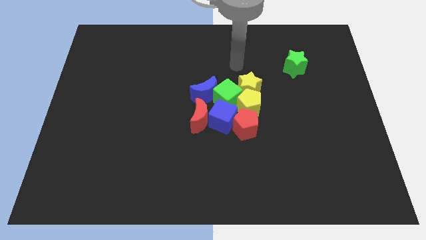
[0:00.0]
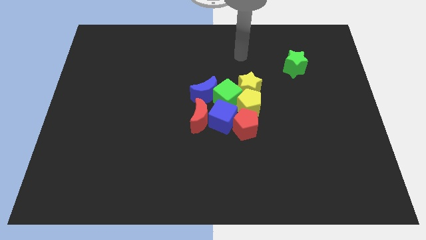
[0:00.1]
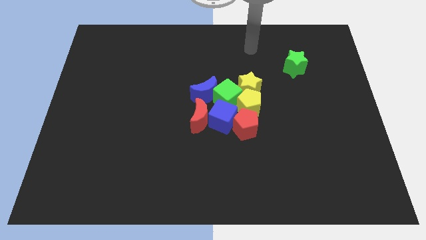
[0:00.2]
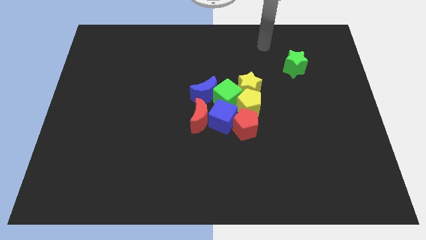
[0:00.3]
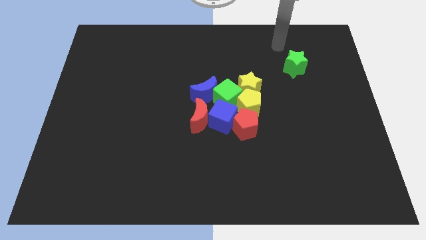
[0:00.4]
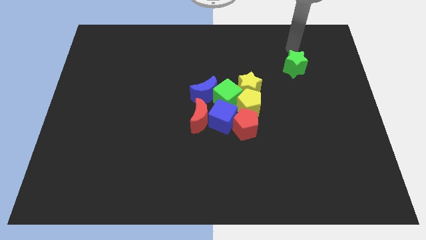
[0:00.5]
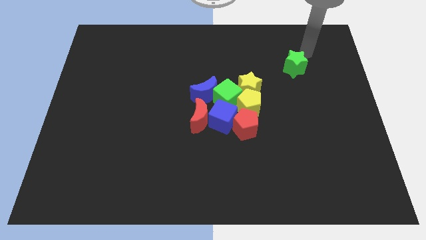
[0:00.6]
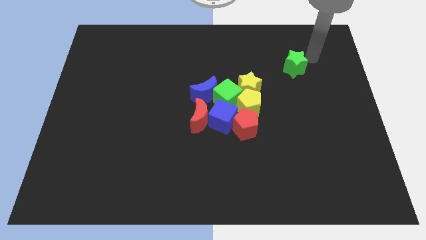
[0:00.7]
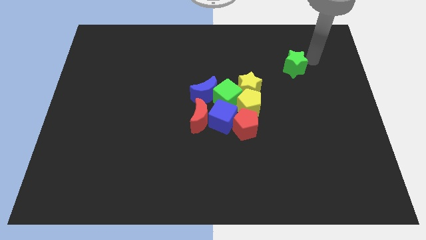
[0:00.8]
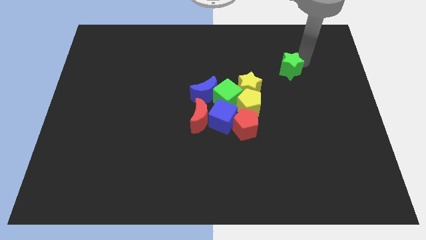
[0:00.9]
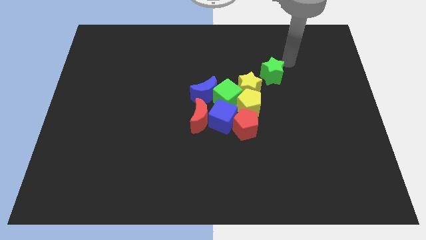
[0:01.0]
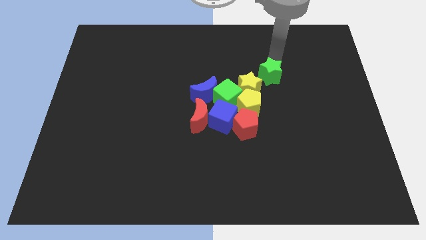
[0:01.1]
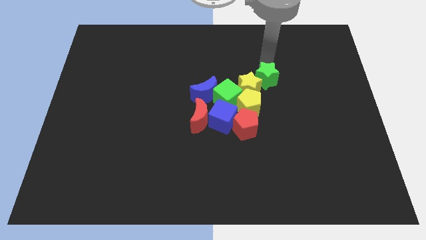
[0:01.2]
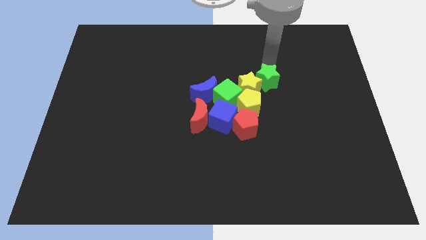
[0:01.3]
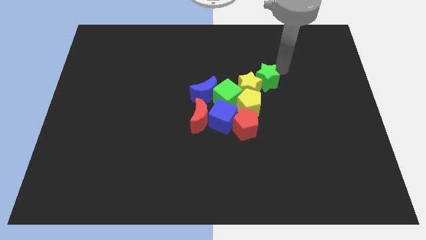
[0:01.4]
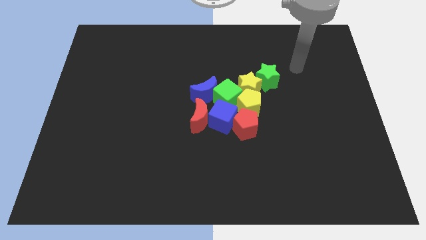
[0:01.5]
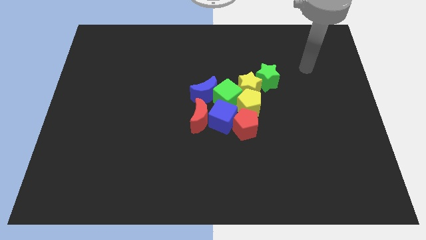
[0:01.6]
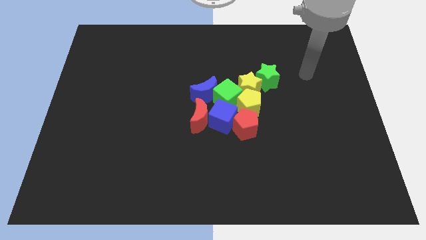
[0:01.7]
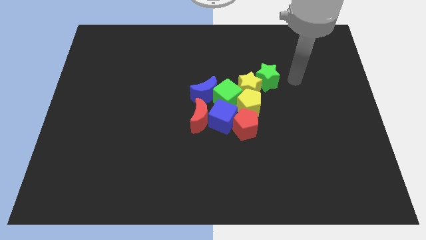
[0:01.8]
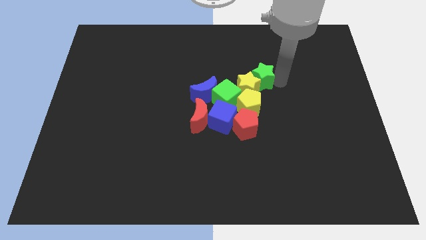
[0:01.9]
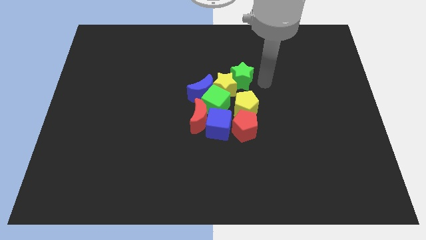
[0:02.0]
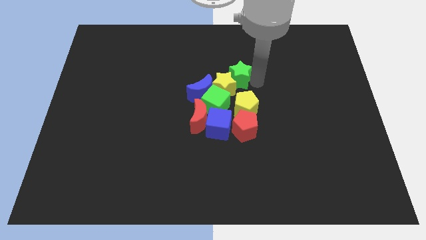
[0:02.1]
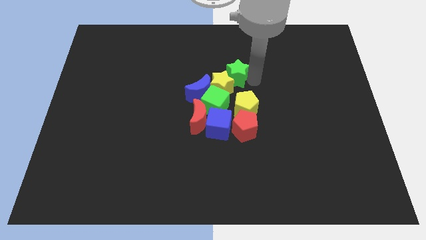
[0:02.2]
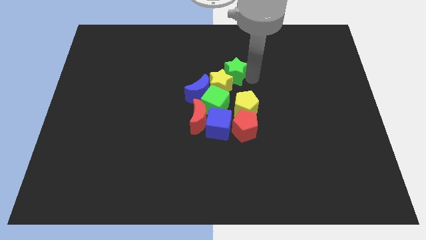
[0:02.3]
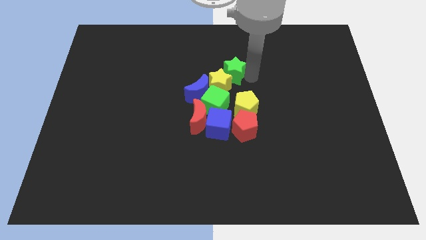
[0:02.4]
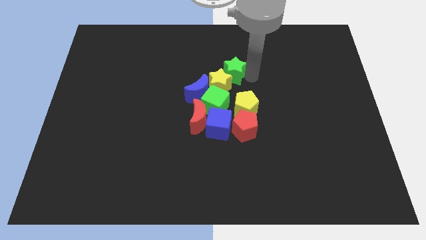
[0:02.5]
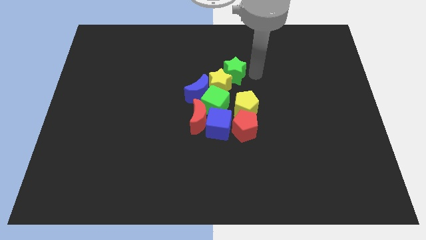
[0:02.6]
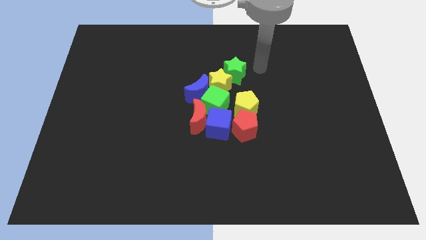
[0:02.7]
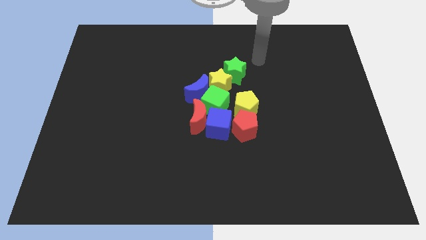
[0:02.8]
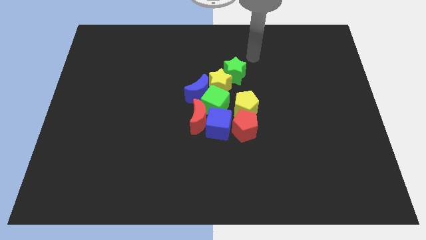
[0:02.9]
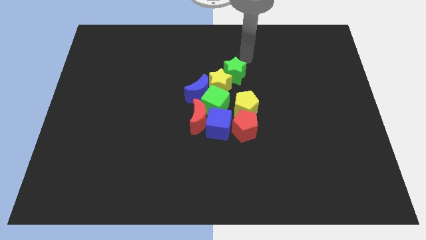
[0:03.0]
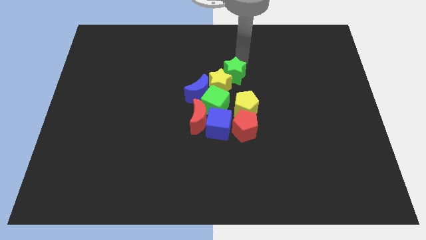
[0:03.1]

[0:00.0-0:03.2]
slide the green star to the top right side of the yellow star

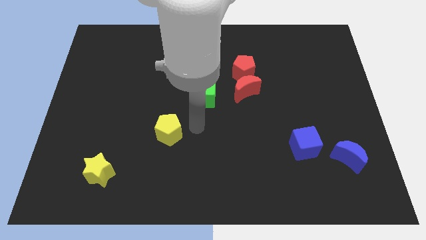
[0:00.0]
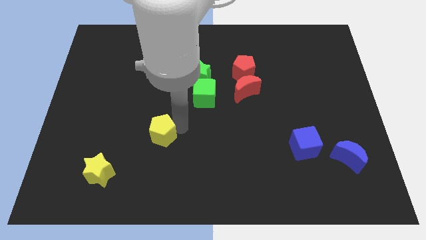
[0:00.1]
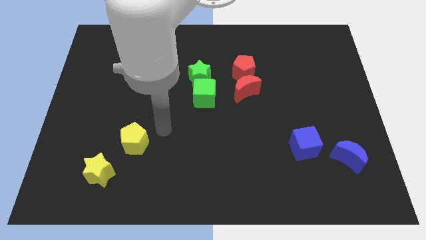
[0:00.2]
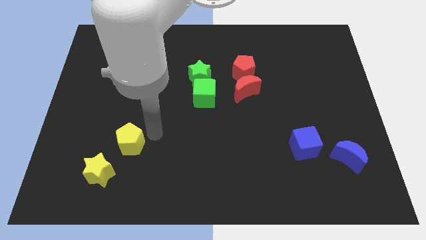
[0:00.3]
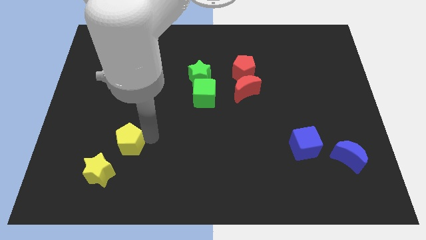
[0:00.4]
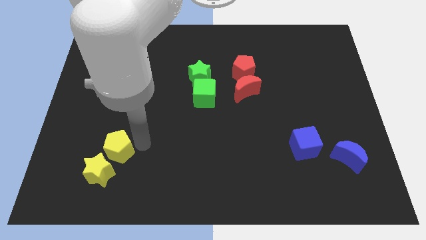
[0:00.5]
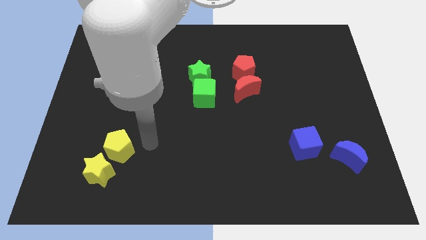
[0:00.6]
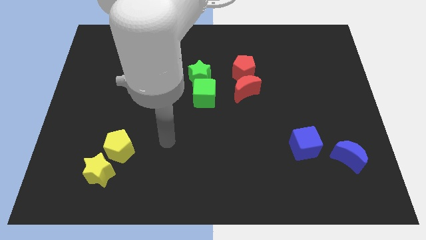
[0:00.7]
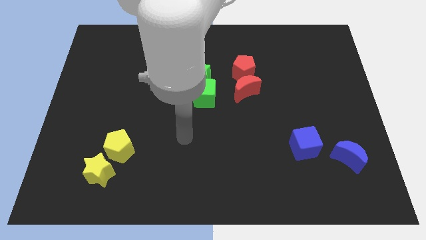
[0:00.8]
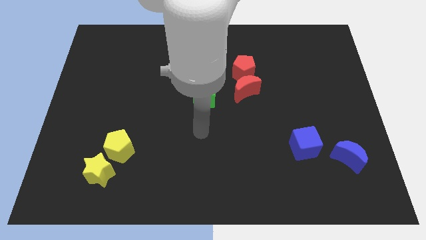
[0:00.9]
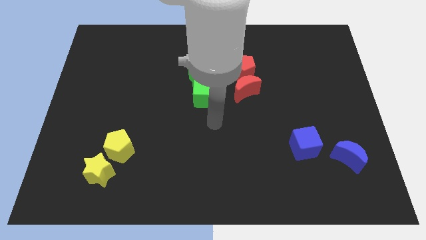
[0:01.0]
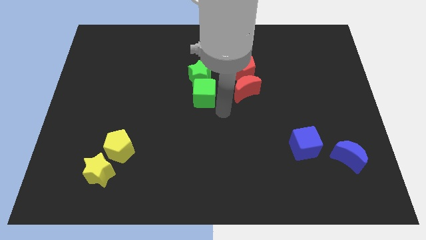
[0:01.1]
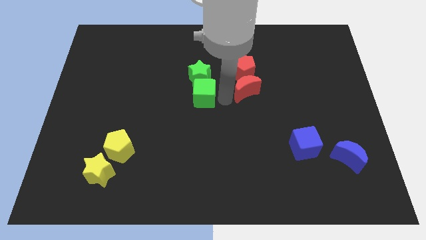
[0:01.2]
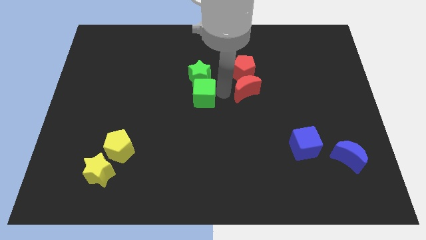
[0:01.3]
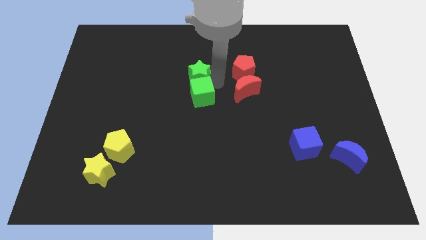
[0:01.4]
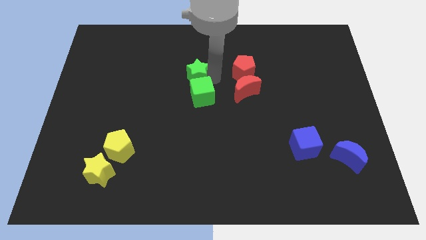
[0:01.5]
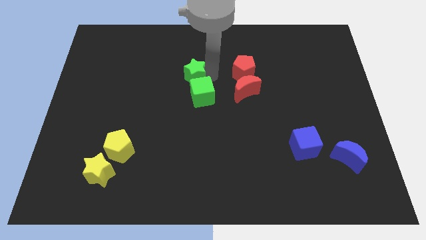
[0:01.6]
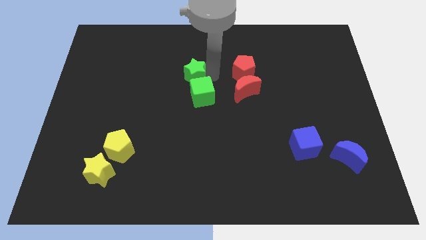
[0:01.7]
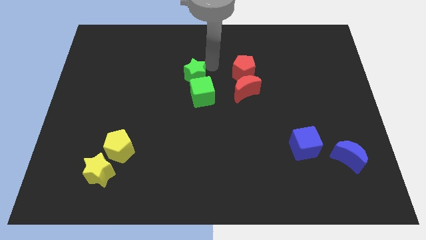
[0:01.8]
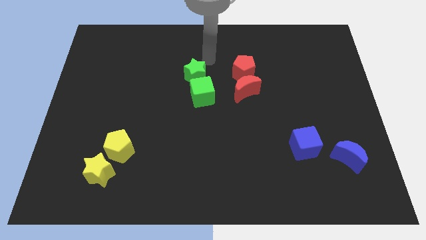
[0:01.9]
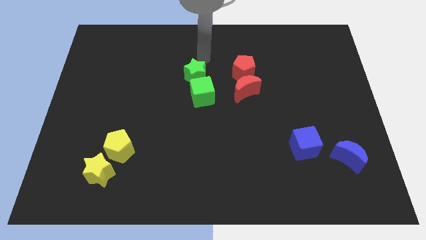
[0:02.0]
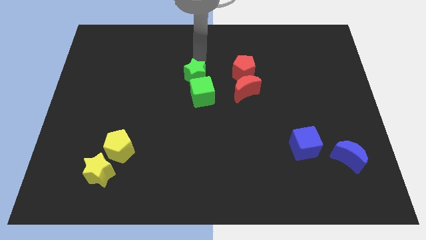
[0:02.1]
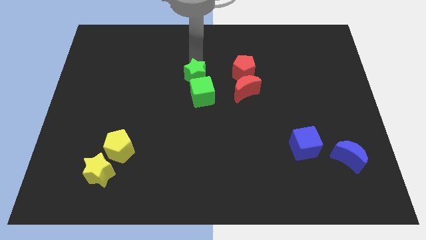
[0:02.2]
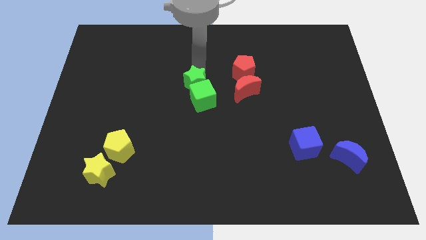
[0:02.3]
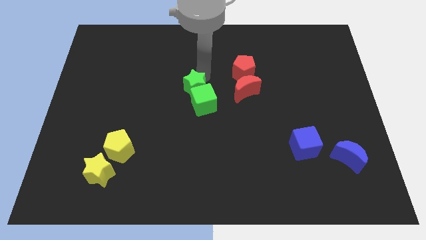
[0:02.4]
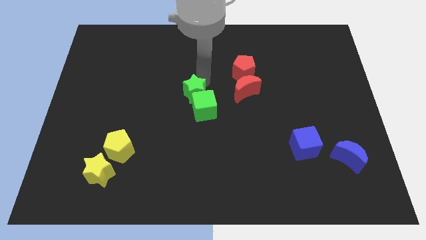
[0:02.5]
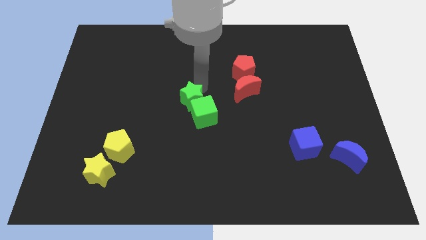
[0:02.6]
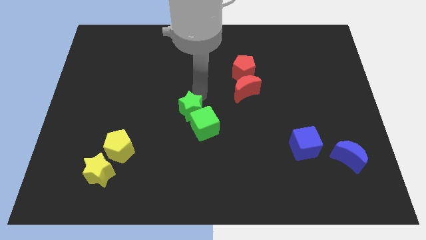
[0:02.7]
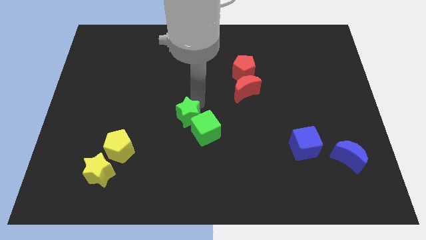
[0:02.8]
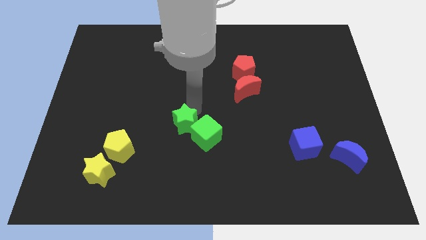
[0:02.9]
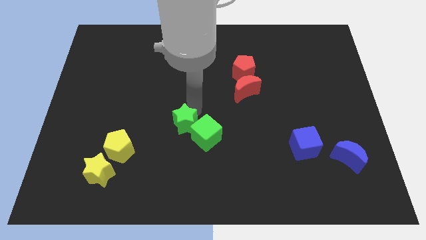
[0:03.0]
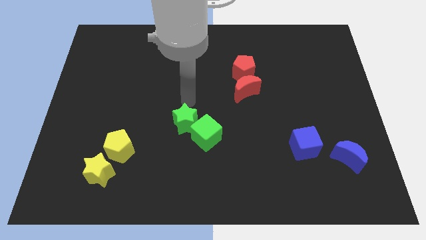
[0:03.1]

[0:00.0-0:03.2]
slightly push green blocks towards down

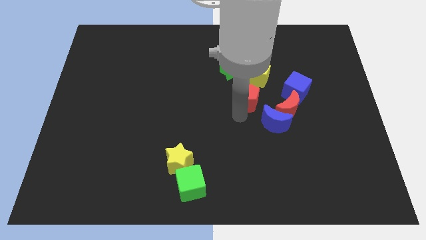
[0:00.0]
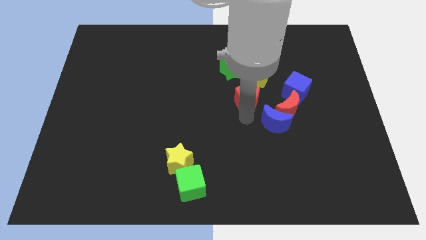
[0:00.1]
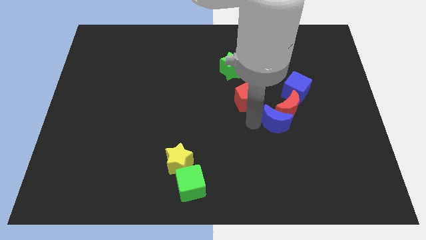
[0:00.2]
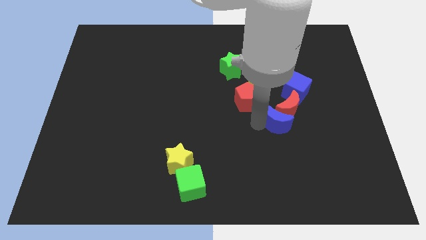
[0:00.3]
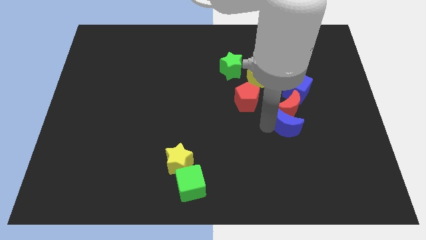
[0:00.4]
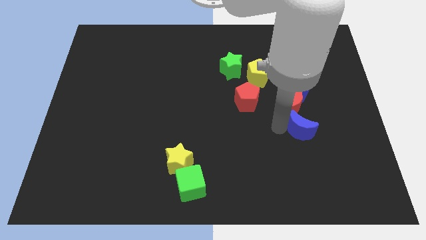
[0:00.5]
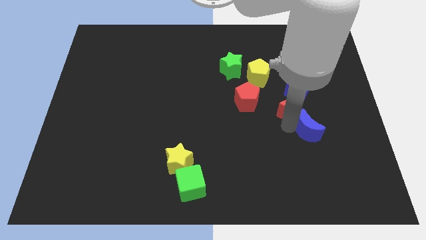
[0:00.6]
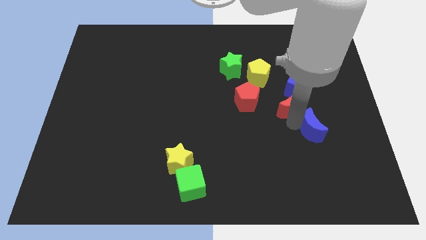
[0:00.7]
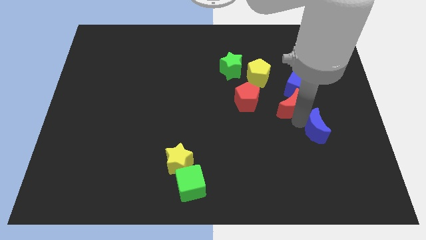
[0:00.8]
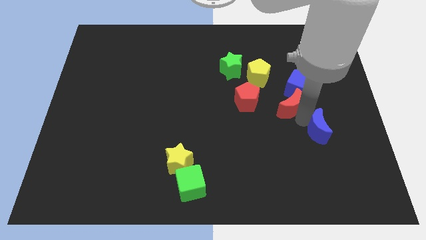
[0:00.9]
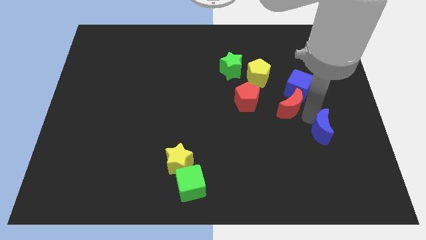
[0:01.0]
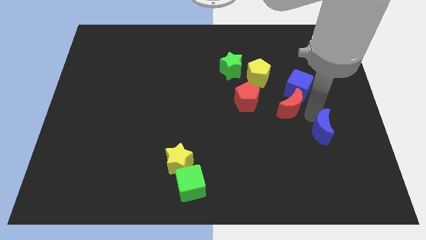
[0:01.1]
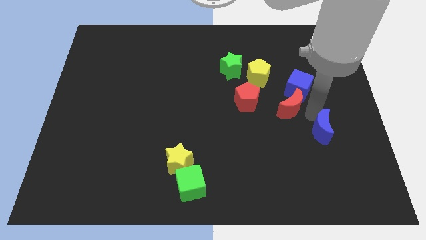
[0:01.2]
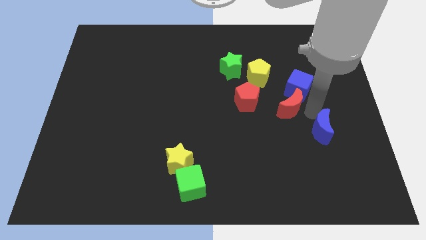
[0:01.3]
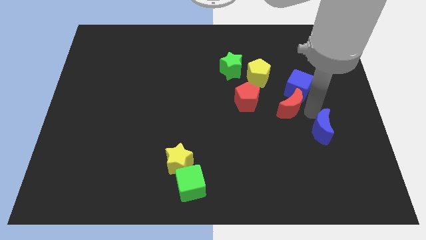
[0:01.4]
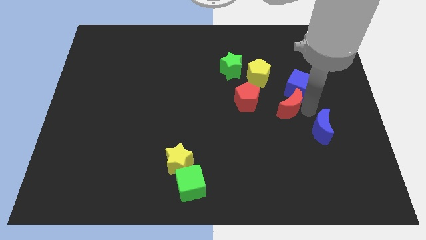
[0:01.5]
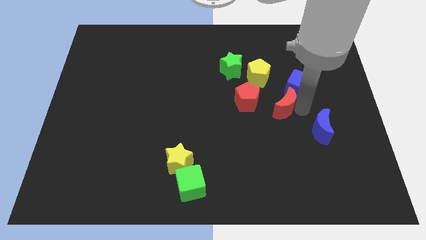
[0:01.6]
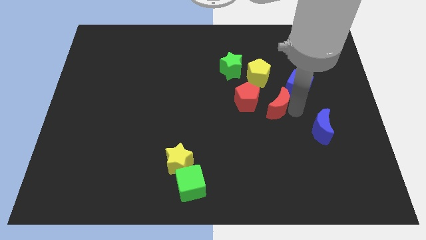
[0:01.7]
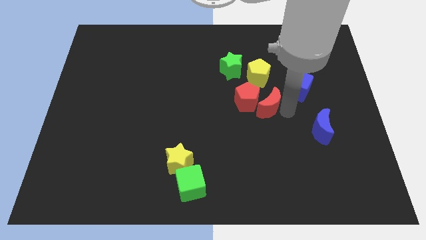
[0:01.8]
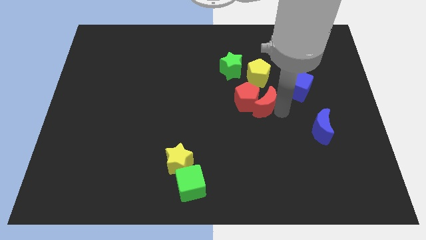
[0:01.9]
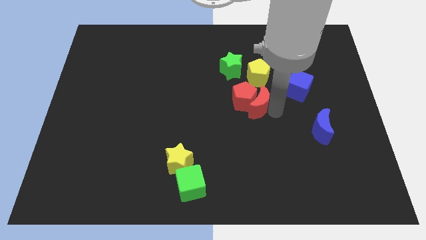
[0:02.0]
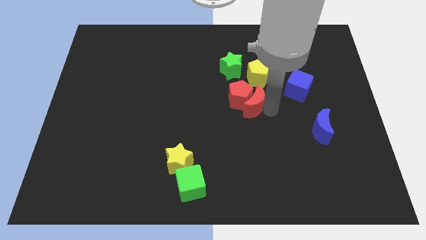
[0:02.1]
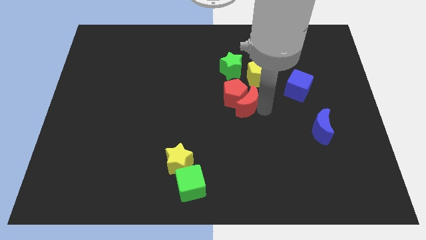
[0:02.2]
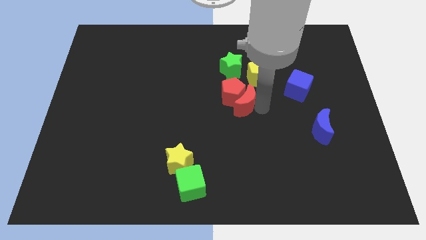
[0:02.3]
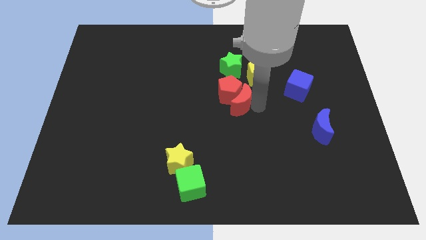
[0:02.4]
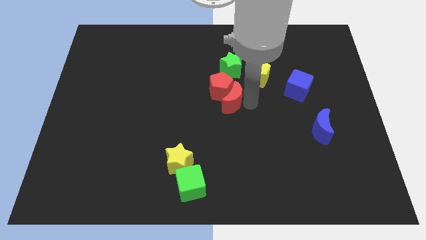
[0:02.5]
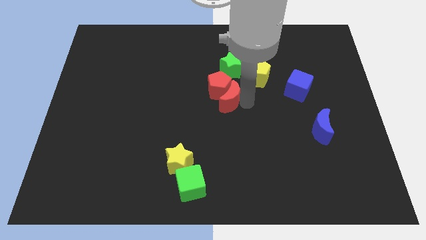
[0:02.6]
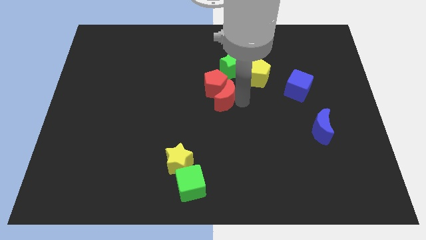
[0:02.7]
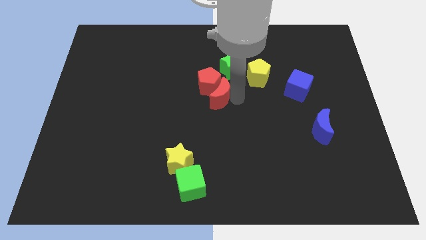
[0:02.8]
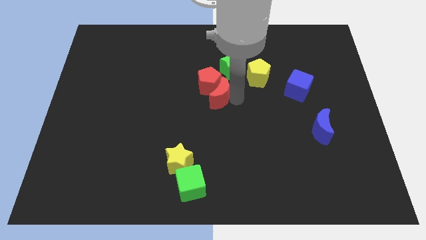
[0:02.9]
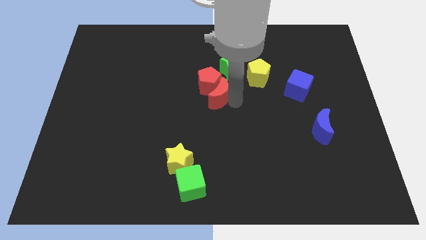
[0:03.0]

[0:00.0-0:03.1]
push the red moon into the red pentagon
